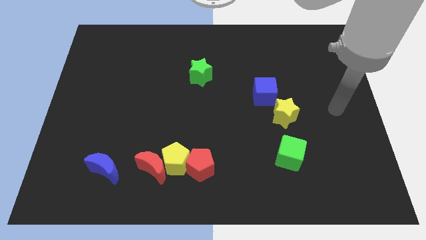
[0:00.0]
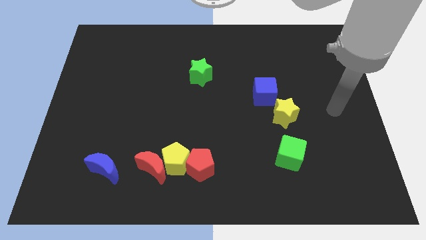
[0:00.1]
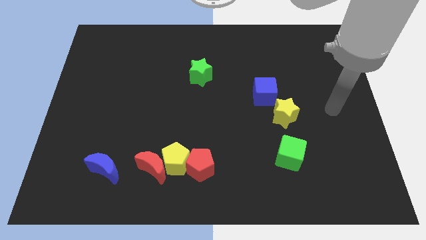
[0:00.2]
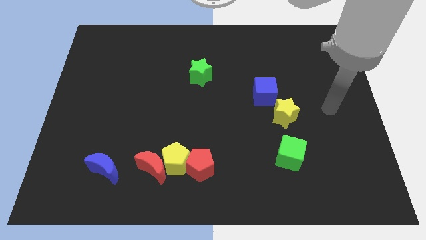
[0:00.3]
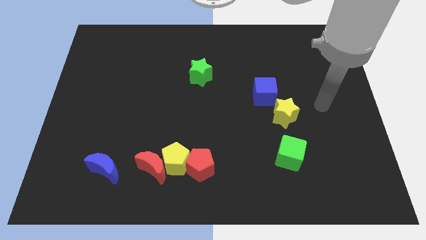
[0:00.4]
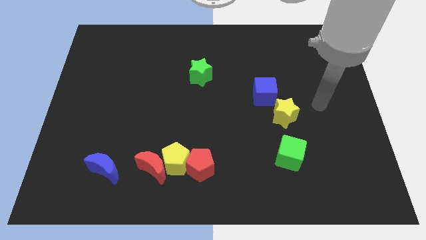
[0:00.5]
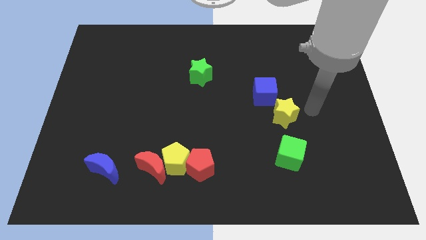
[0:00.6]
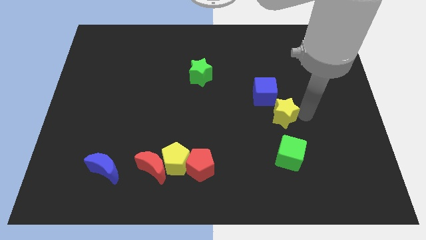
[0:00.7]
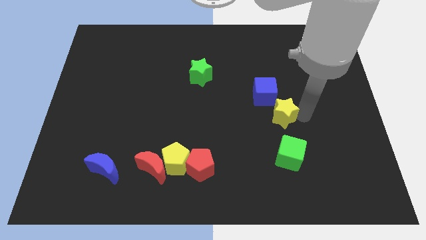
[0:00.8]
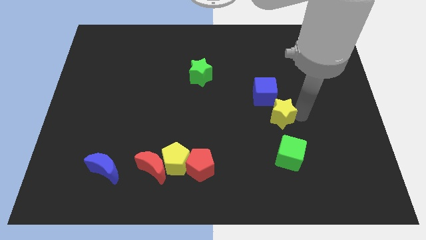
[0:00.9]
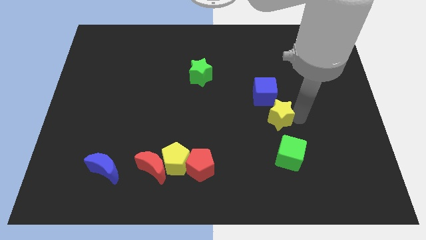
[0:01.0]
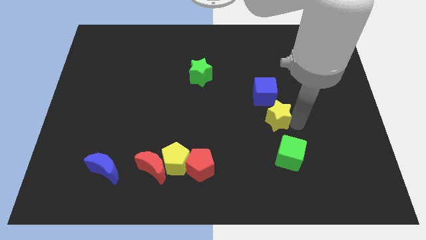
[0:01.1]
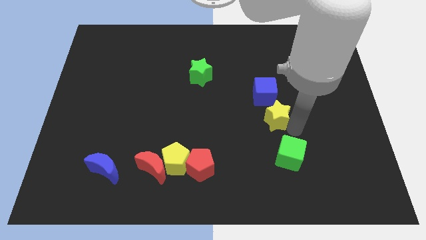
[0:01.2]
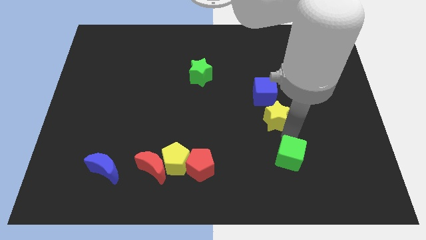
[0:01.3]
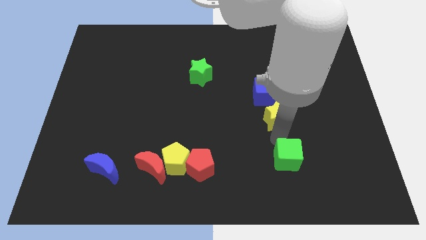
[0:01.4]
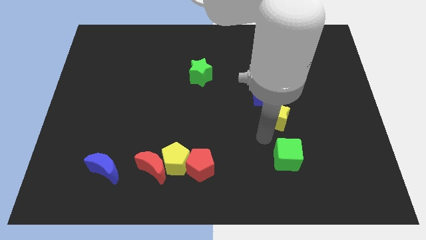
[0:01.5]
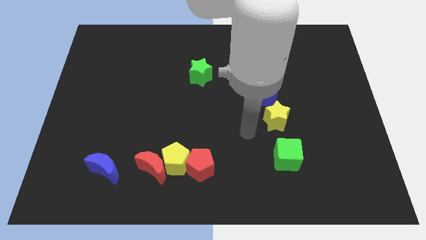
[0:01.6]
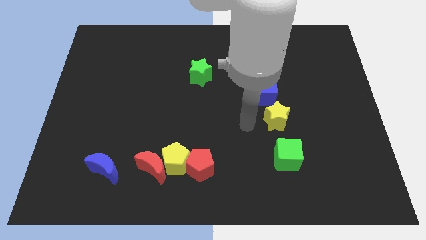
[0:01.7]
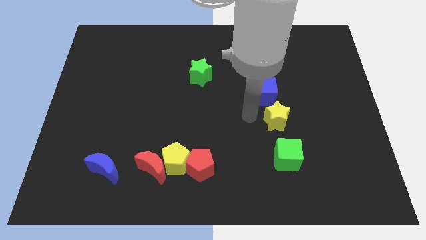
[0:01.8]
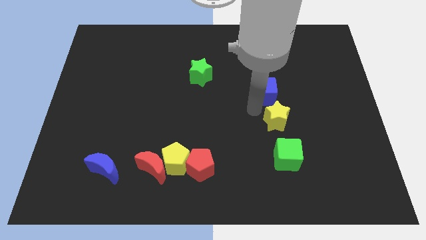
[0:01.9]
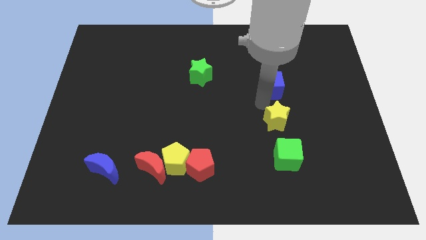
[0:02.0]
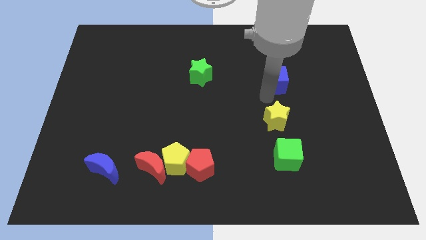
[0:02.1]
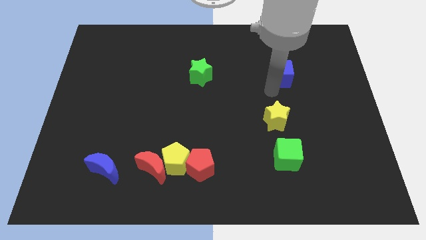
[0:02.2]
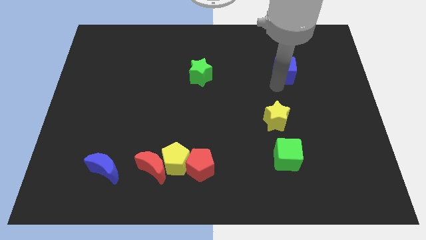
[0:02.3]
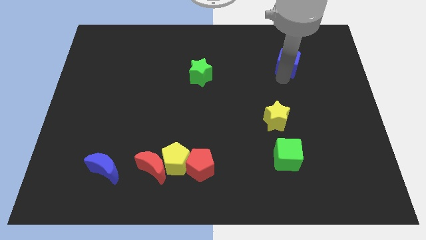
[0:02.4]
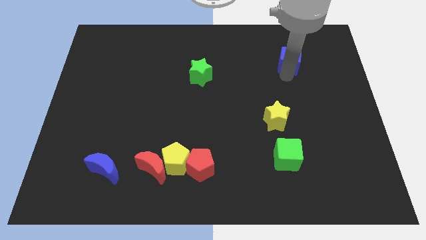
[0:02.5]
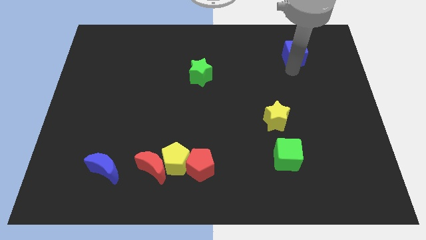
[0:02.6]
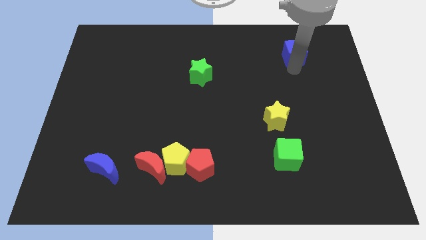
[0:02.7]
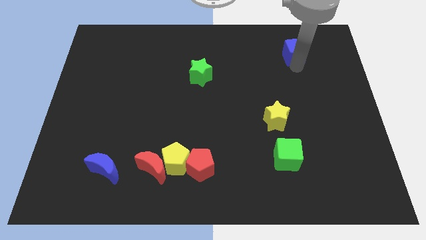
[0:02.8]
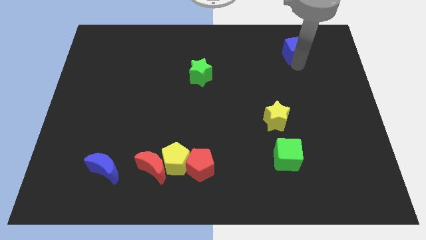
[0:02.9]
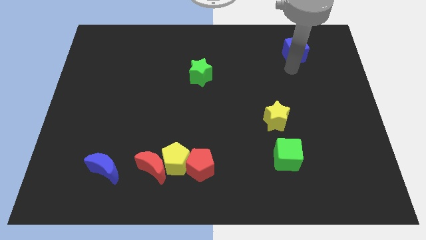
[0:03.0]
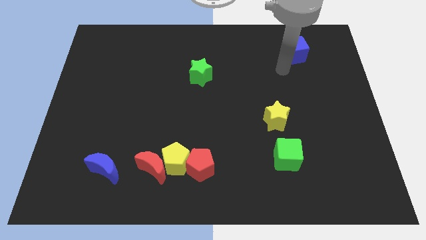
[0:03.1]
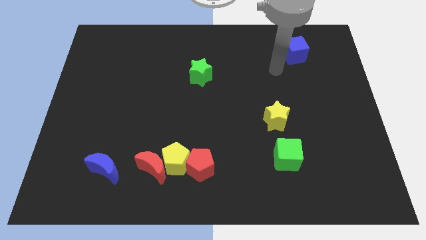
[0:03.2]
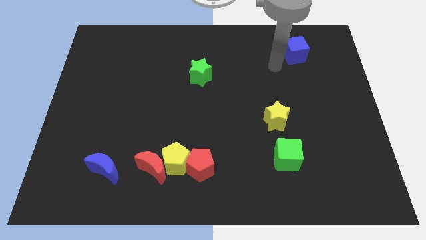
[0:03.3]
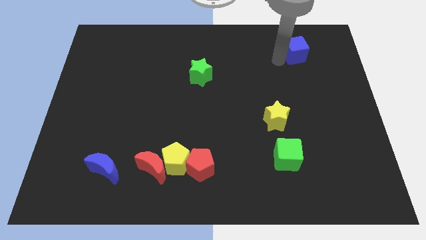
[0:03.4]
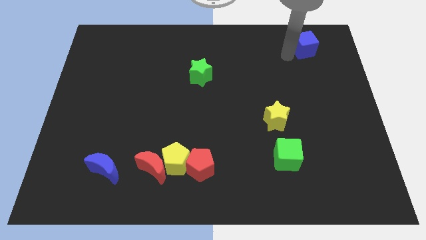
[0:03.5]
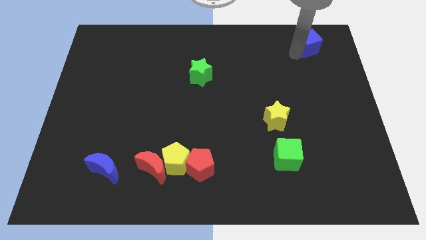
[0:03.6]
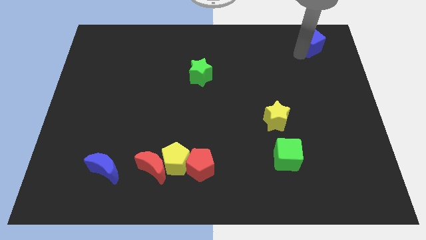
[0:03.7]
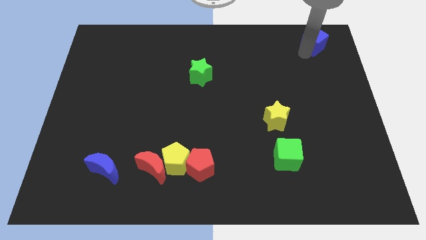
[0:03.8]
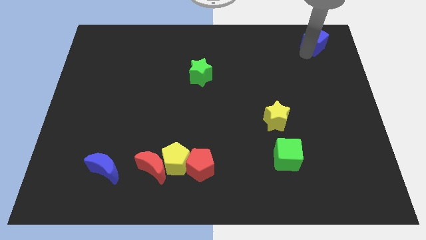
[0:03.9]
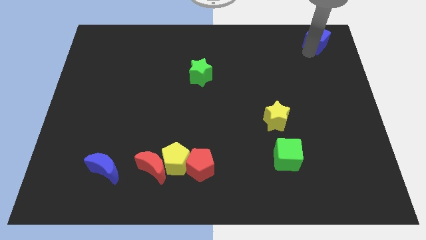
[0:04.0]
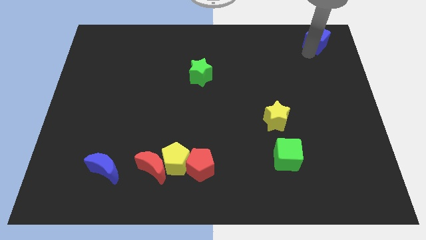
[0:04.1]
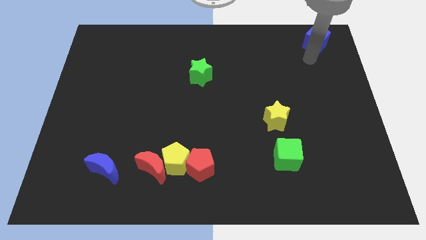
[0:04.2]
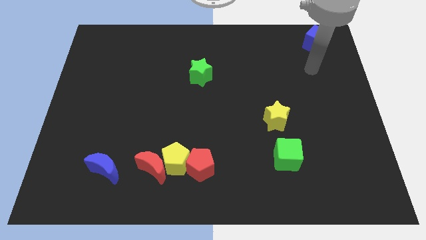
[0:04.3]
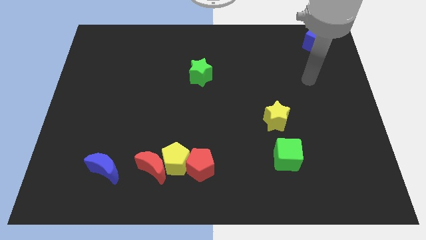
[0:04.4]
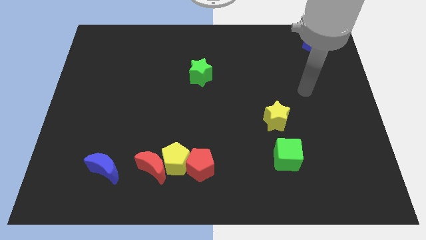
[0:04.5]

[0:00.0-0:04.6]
place blue cube to the top right side of the board

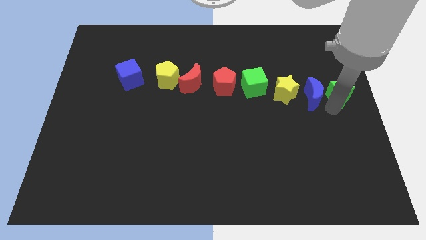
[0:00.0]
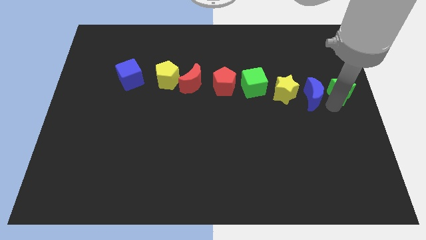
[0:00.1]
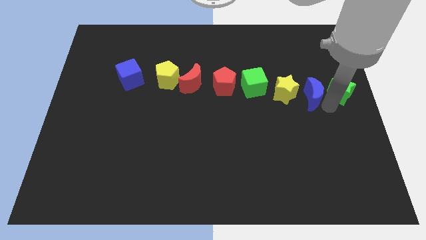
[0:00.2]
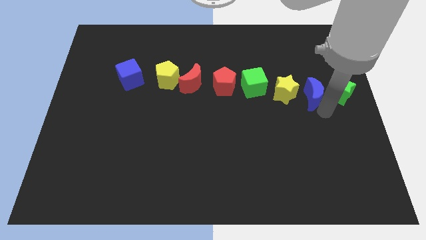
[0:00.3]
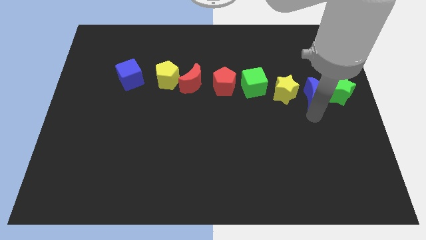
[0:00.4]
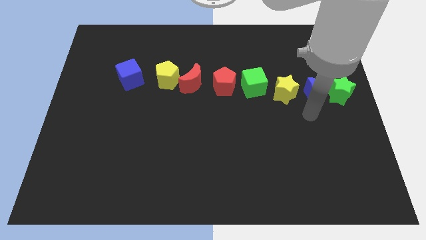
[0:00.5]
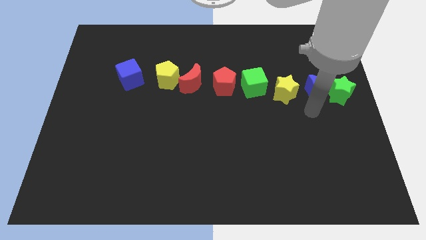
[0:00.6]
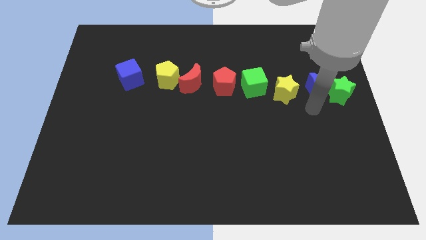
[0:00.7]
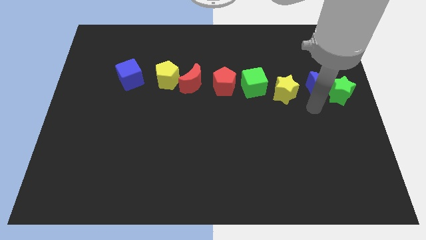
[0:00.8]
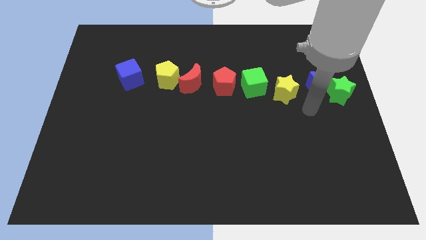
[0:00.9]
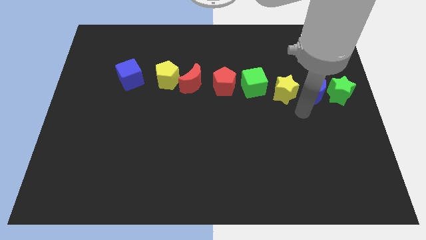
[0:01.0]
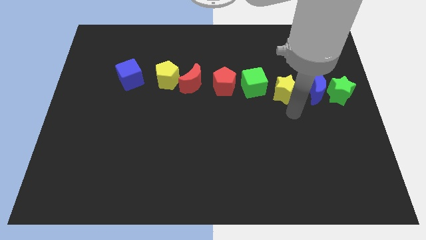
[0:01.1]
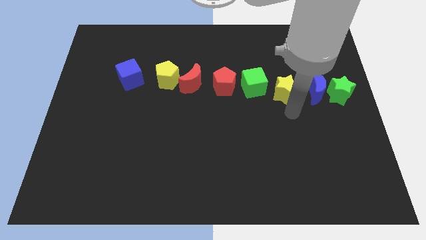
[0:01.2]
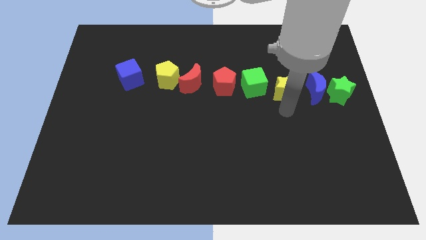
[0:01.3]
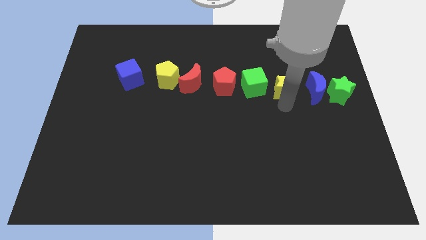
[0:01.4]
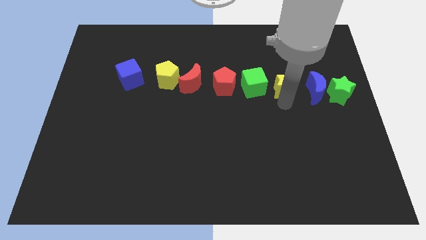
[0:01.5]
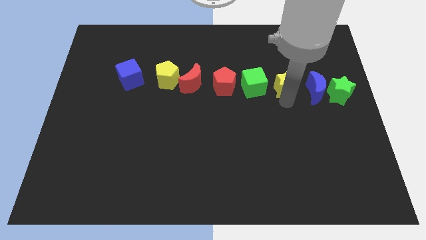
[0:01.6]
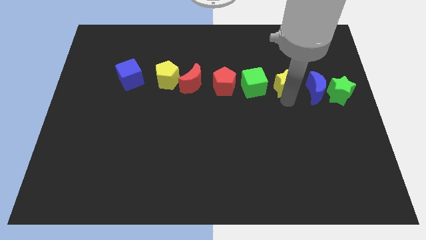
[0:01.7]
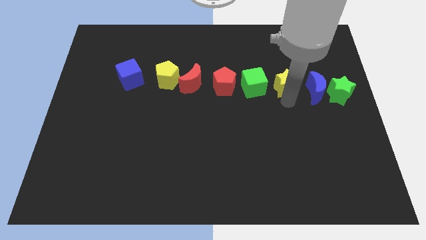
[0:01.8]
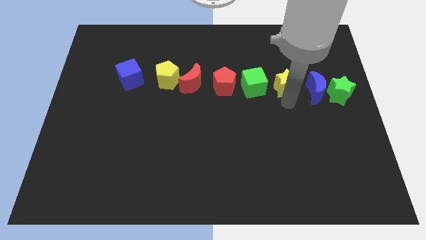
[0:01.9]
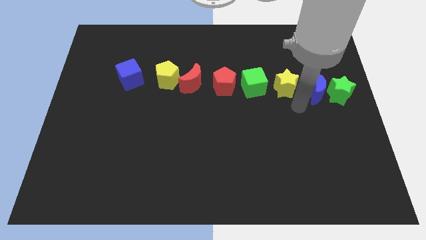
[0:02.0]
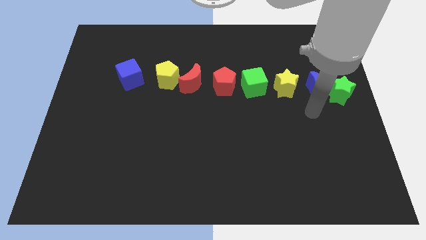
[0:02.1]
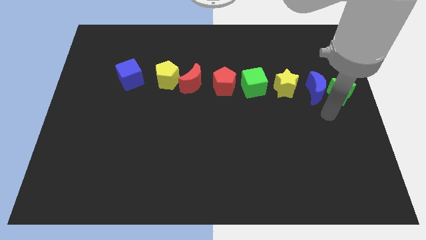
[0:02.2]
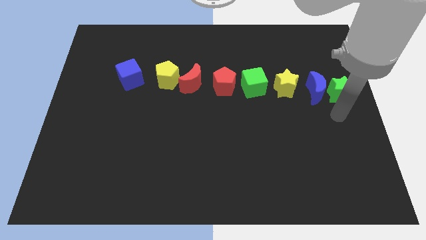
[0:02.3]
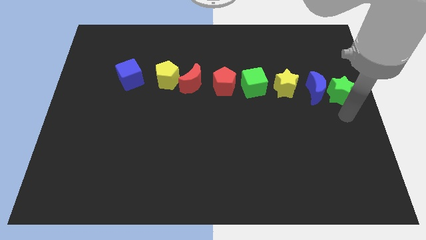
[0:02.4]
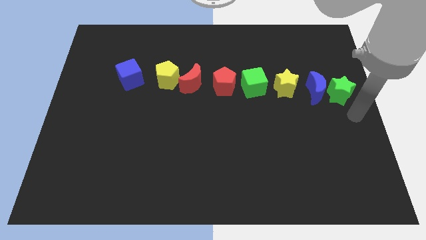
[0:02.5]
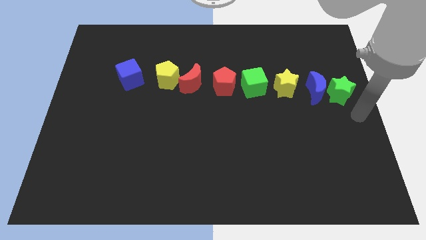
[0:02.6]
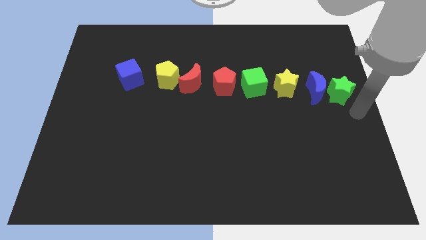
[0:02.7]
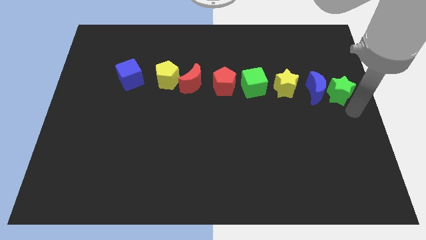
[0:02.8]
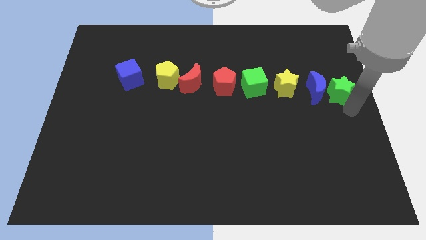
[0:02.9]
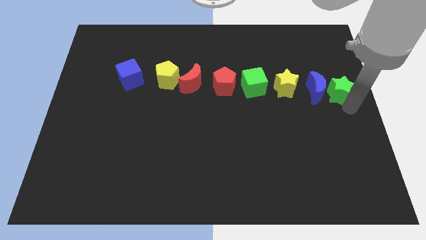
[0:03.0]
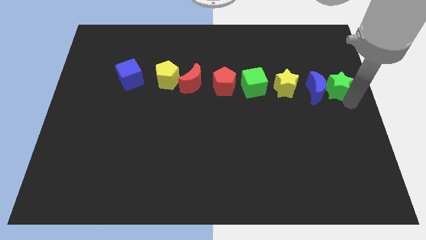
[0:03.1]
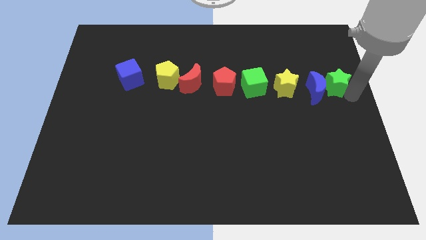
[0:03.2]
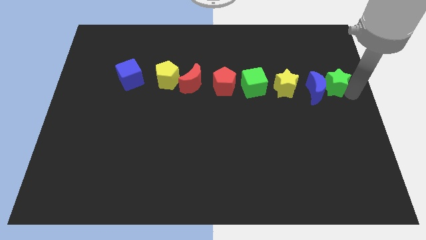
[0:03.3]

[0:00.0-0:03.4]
slightly push blocks to form a line

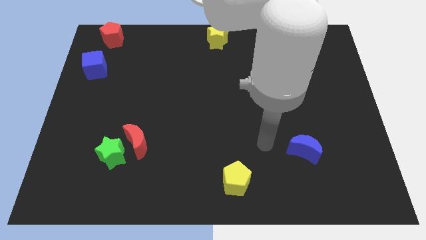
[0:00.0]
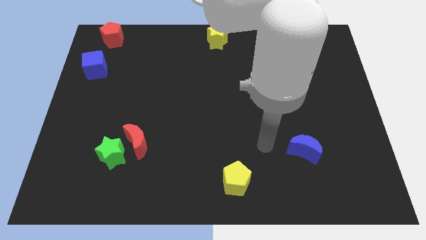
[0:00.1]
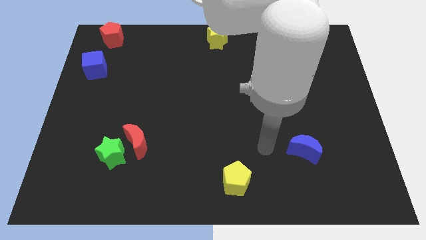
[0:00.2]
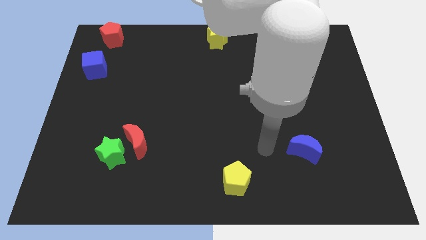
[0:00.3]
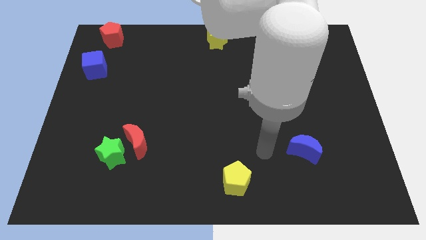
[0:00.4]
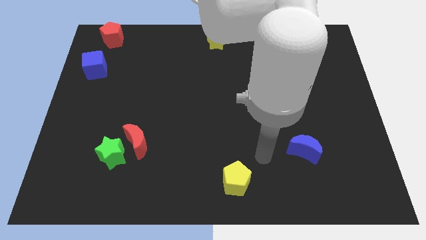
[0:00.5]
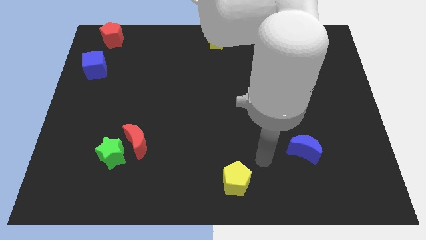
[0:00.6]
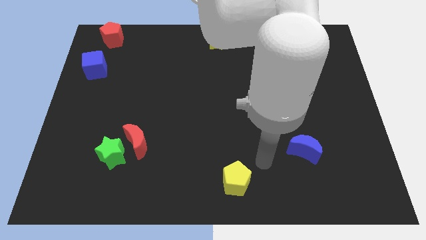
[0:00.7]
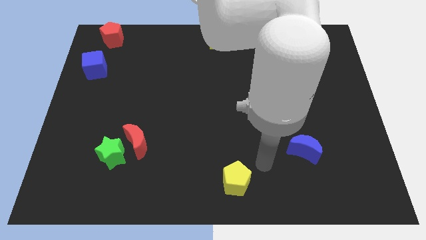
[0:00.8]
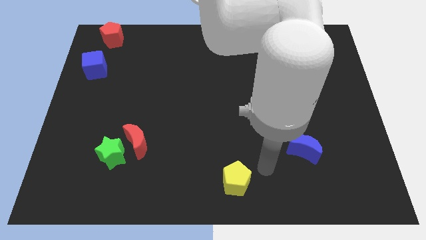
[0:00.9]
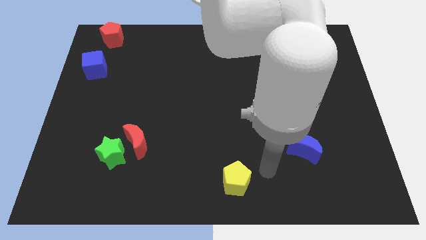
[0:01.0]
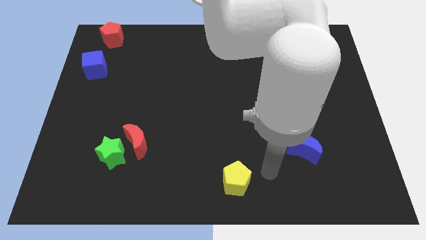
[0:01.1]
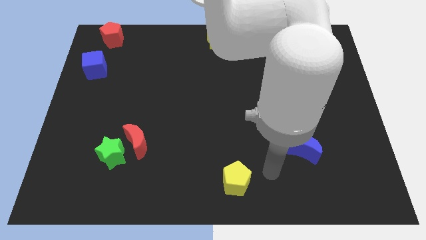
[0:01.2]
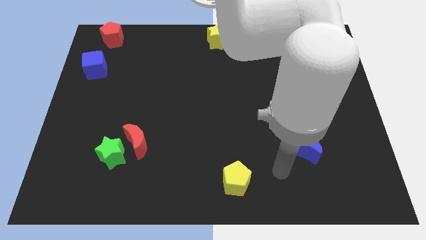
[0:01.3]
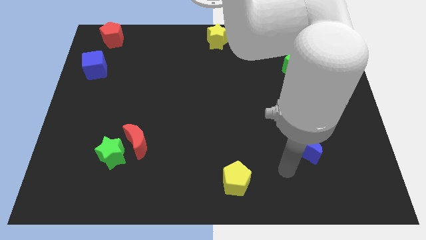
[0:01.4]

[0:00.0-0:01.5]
move your arm to the right of the yellow pentagon
